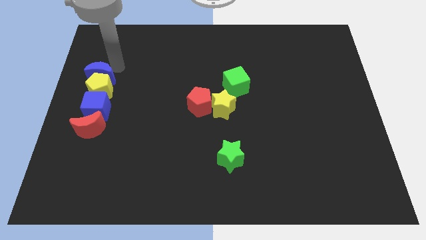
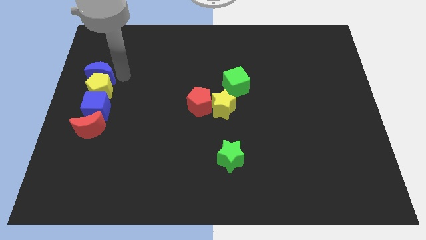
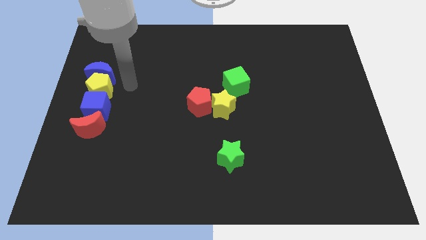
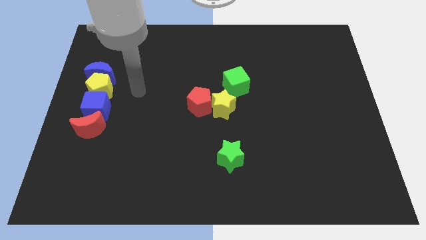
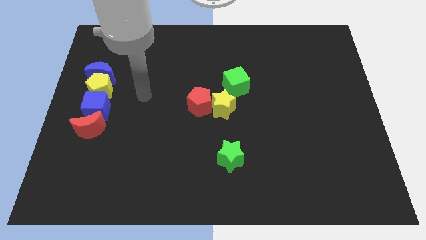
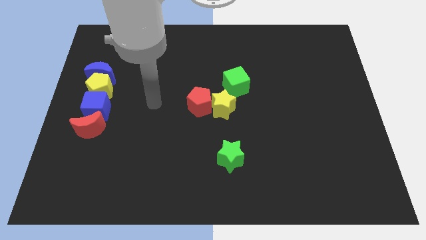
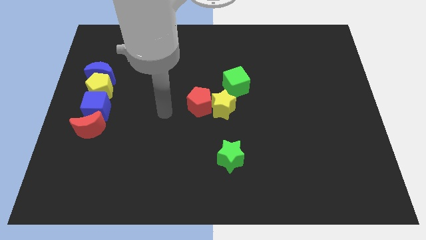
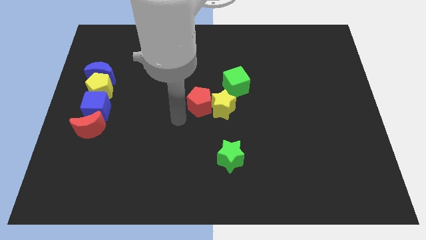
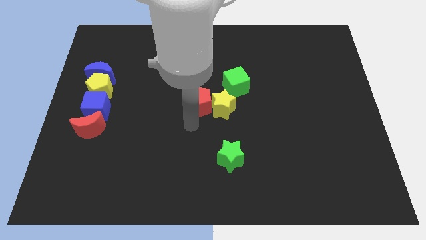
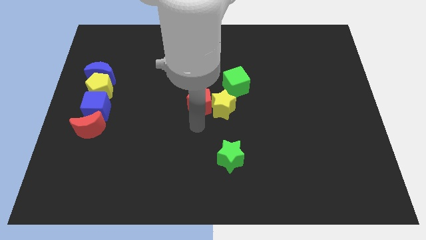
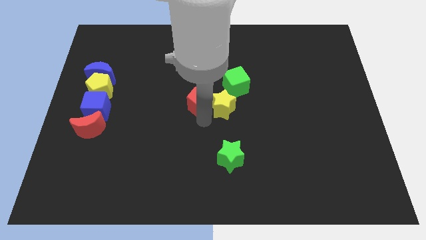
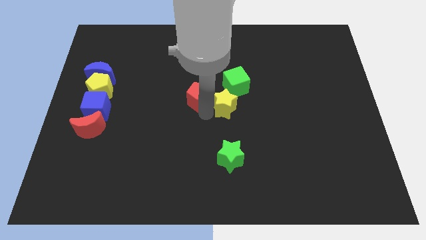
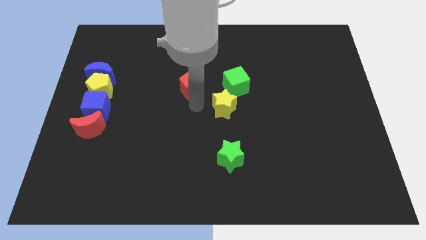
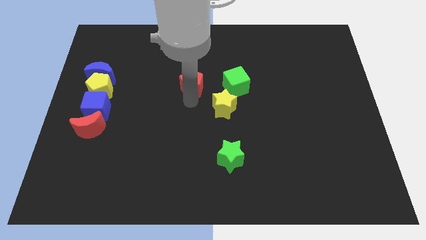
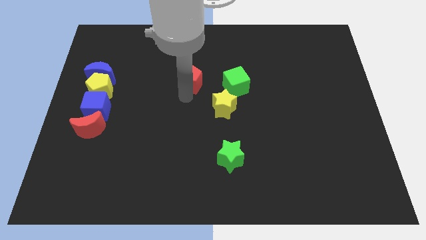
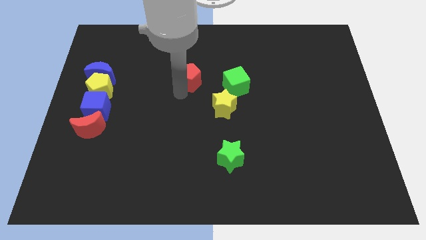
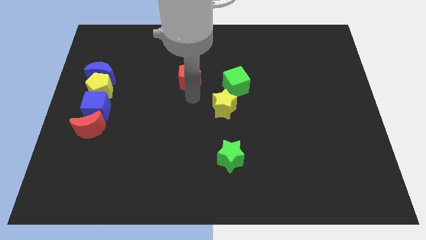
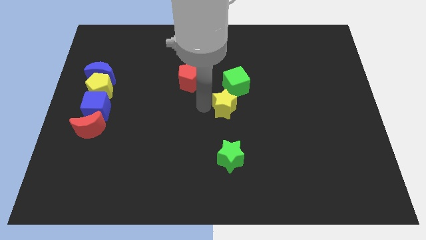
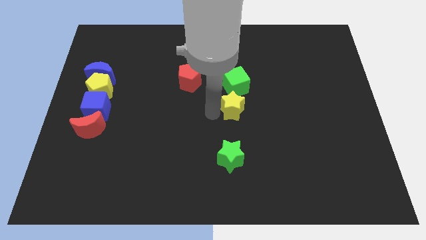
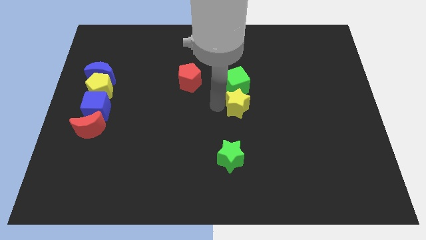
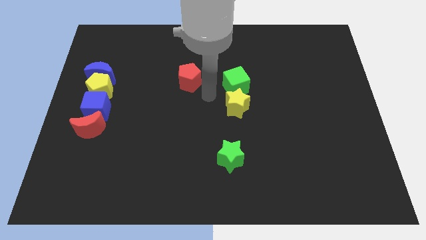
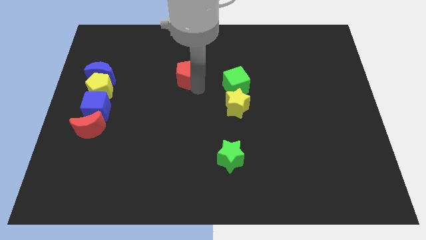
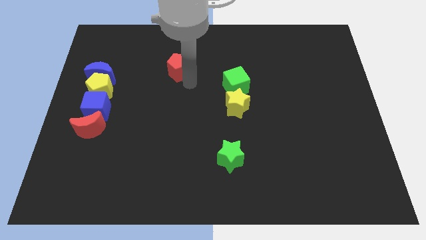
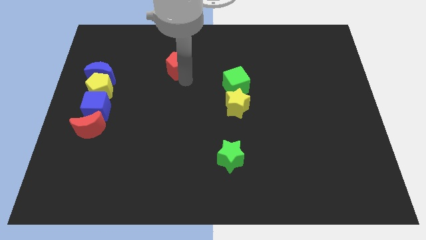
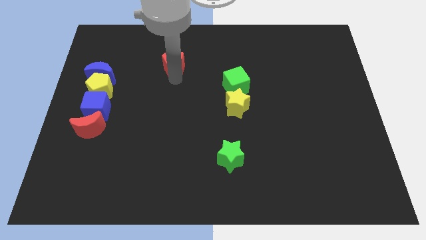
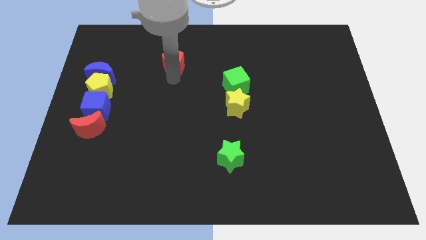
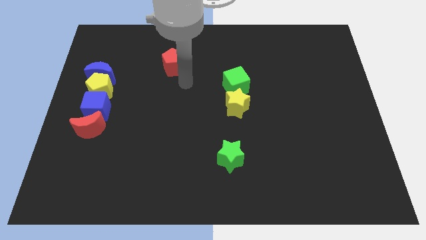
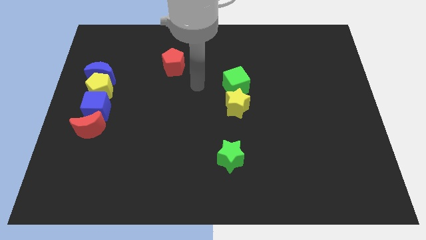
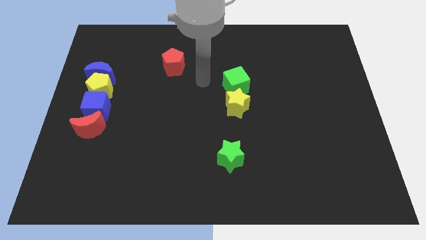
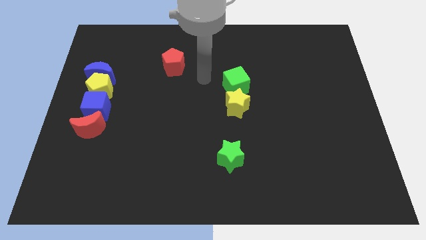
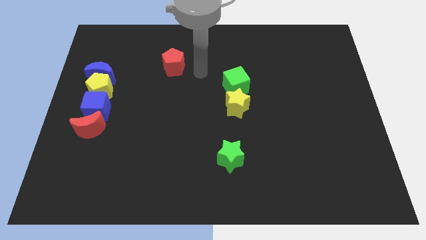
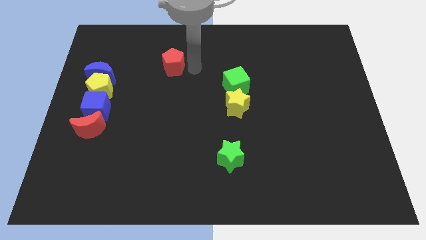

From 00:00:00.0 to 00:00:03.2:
push the red pentagon diagonally to the top left of the green cube

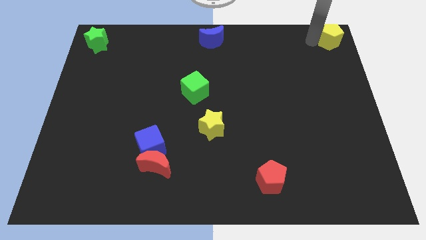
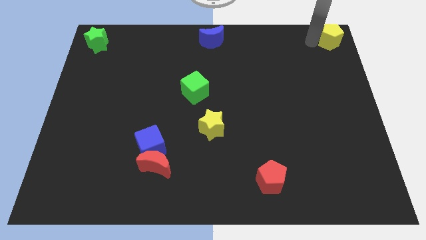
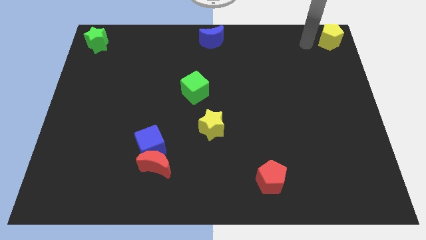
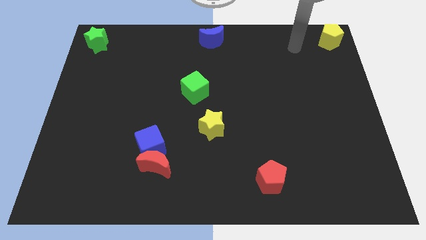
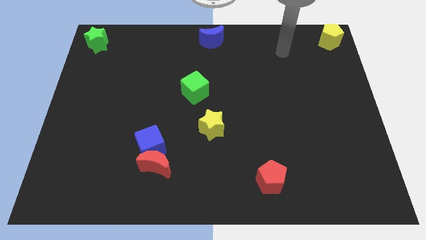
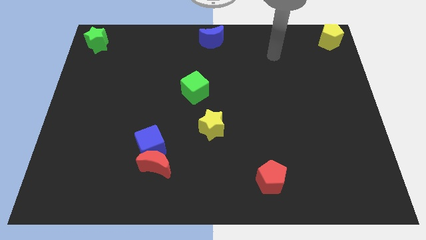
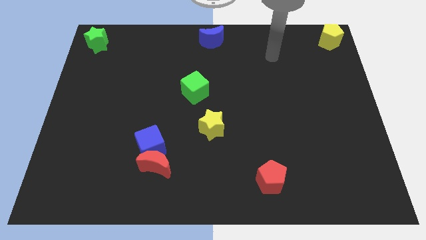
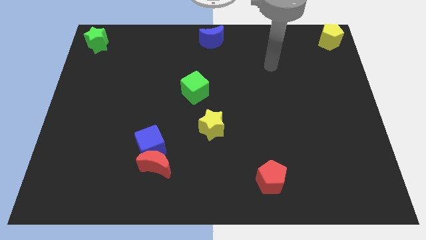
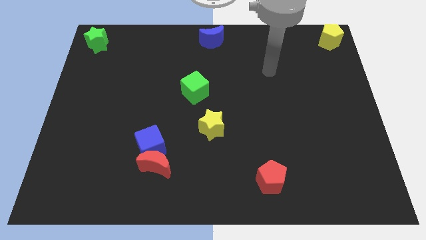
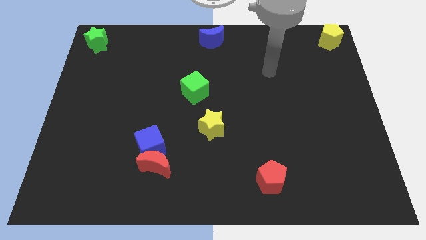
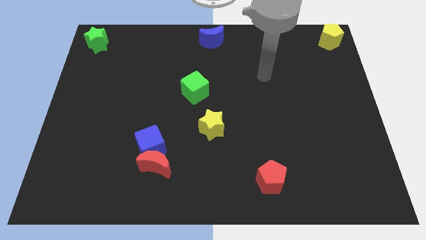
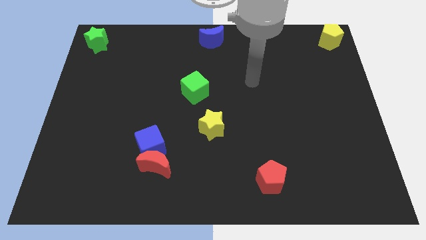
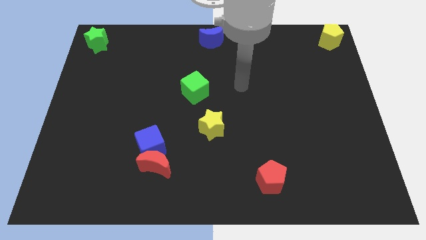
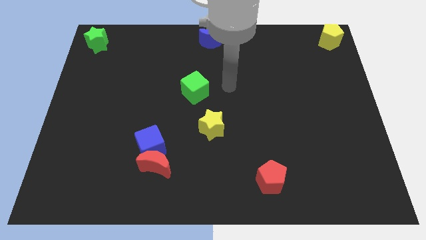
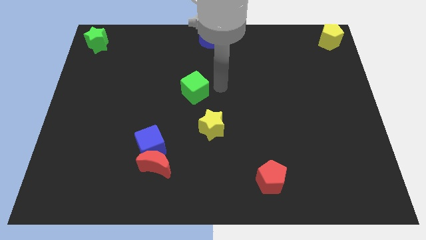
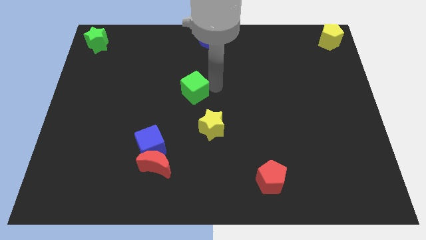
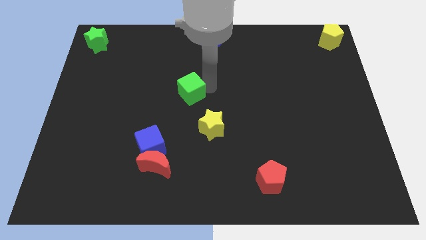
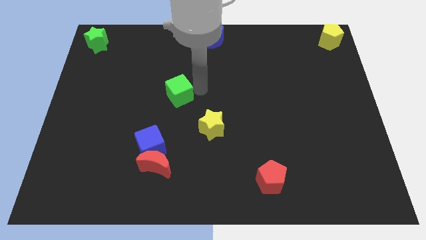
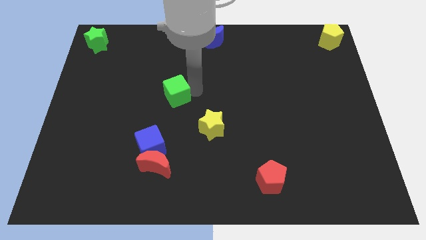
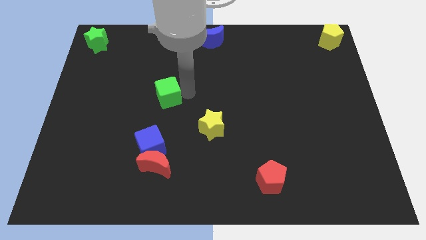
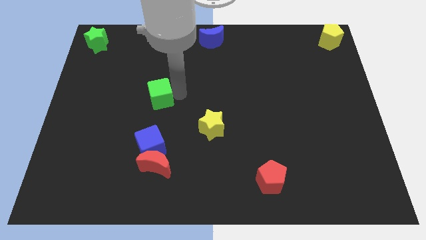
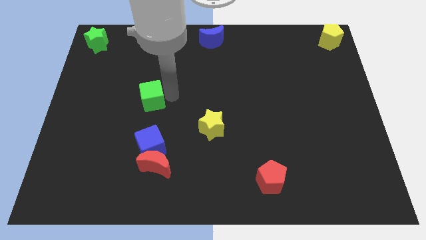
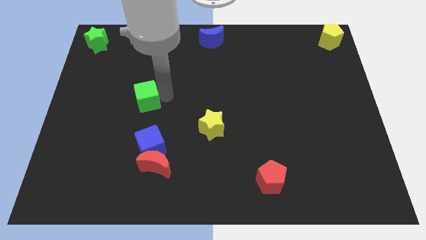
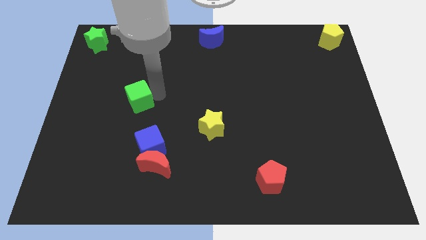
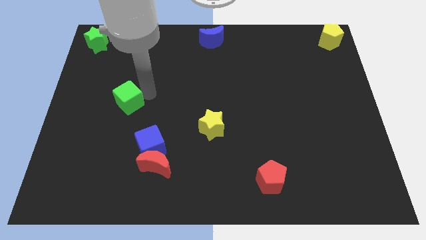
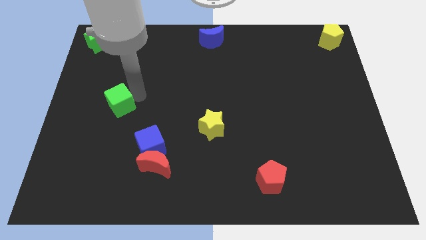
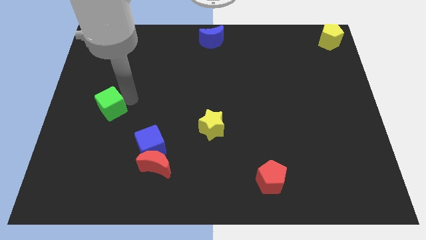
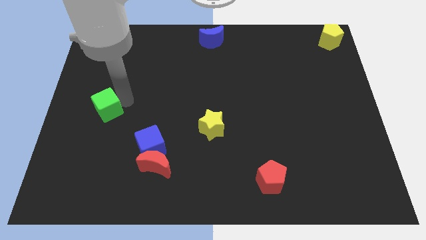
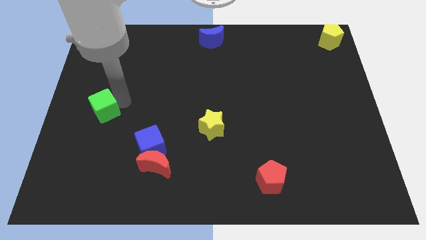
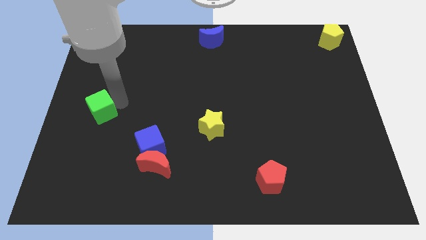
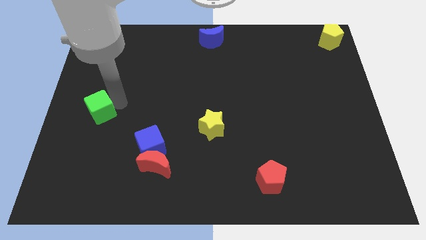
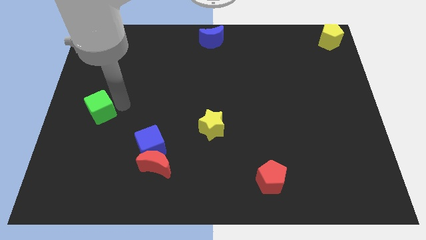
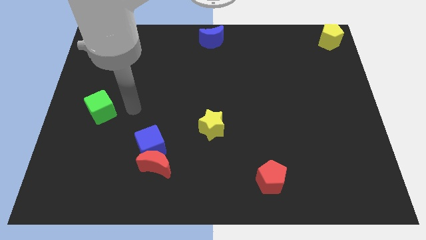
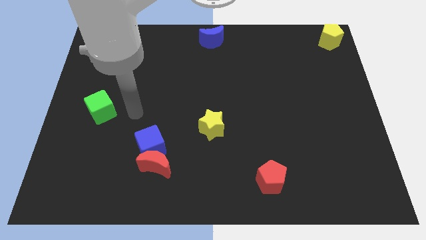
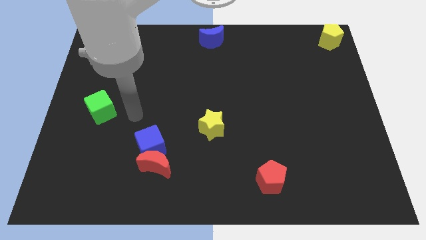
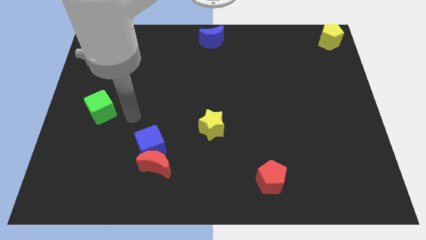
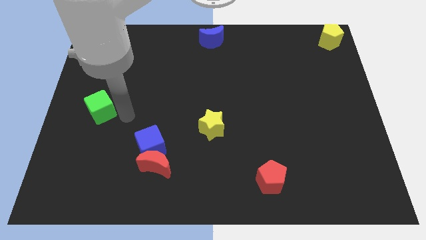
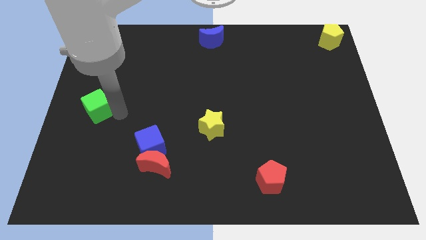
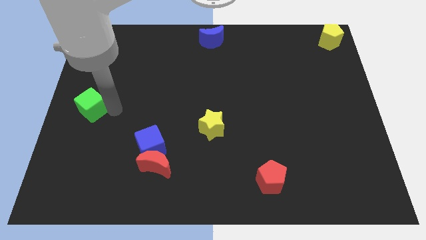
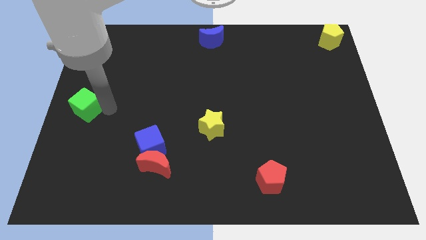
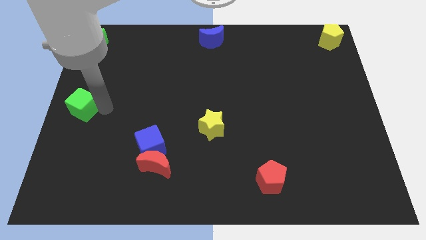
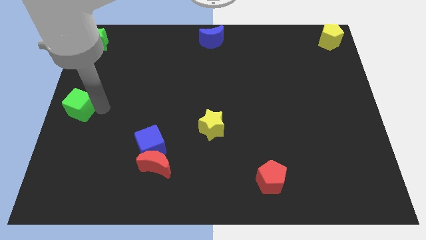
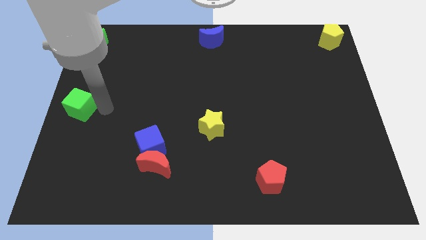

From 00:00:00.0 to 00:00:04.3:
place the green cube above the blue cube

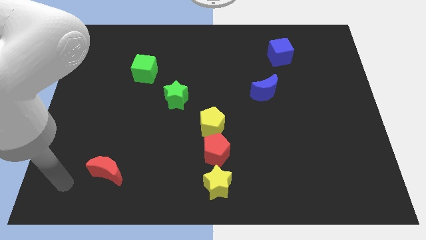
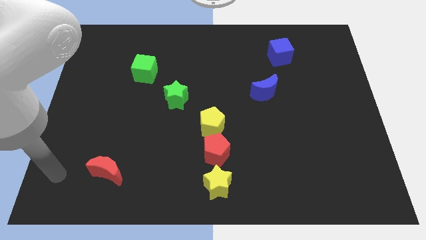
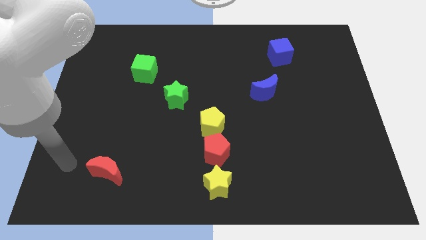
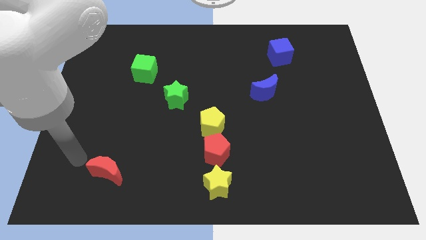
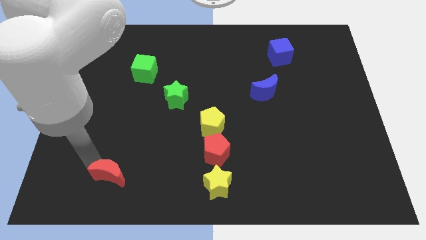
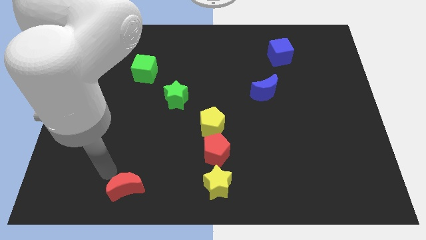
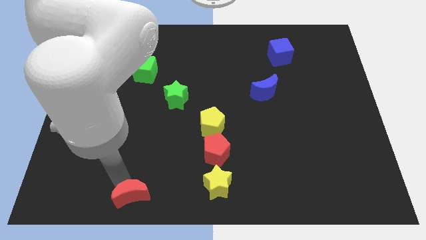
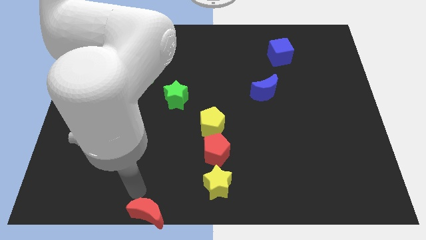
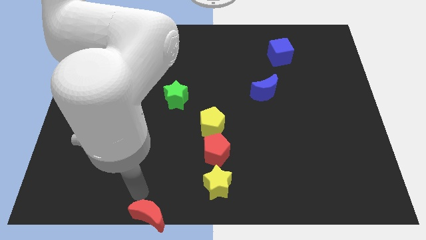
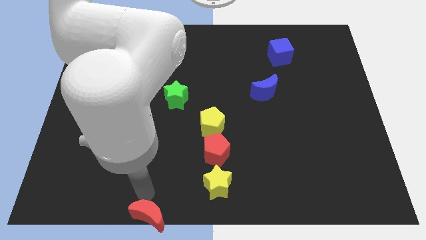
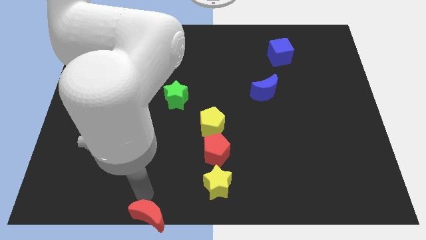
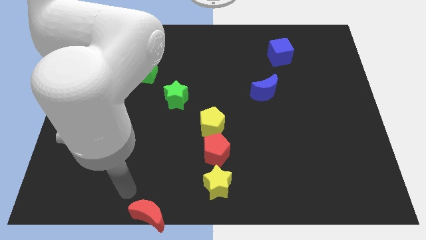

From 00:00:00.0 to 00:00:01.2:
push the red moon diagonally to the bottom

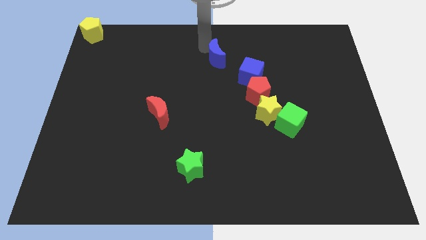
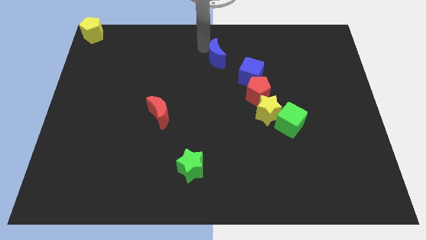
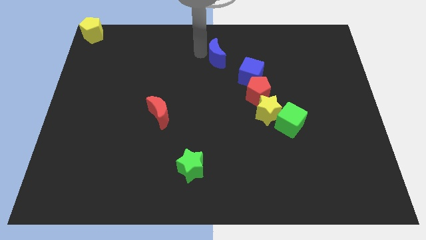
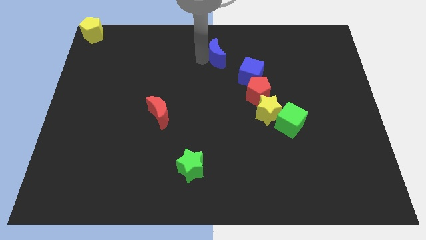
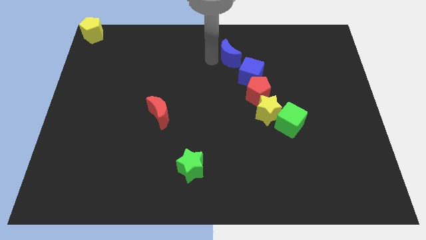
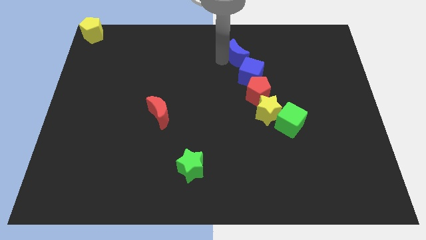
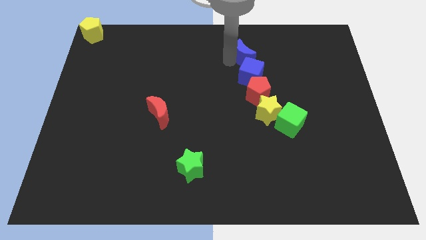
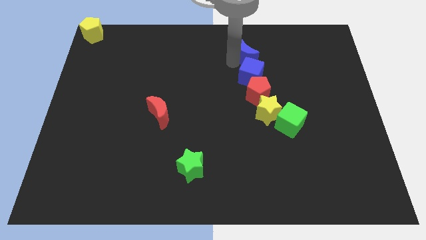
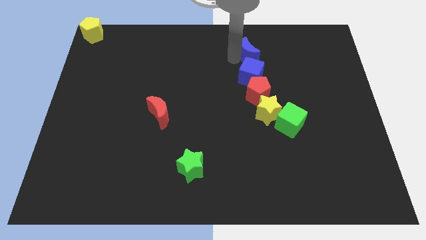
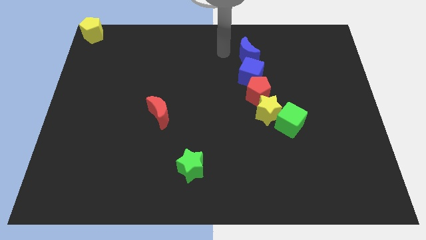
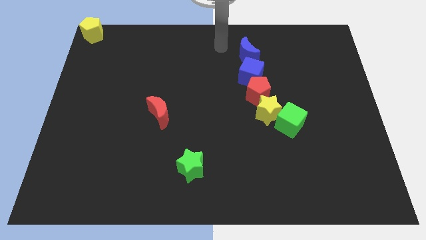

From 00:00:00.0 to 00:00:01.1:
put the blue moon above the blue cube
